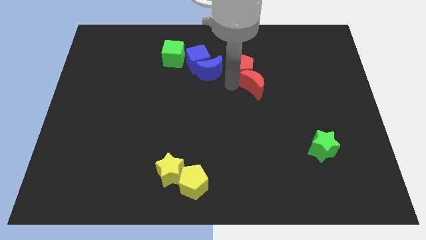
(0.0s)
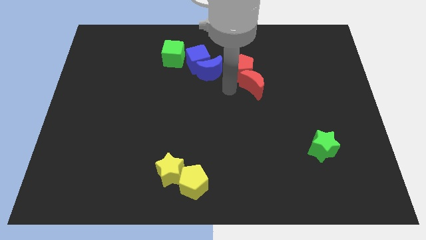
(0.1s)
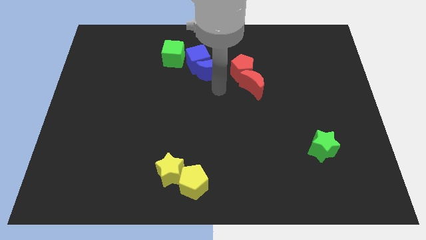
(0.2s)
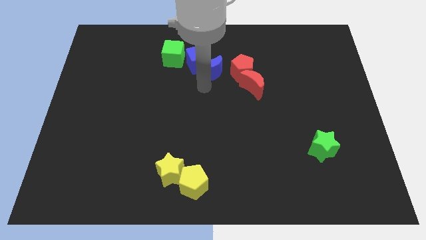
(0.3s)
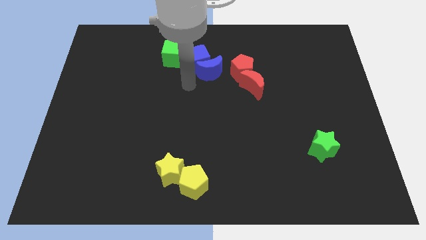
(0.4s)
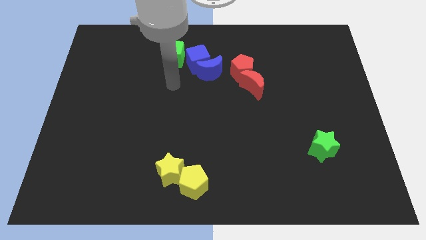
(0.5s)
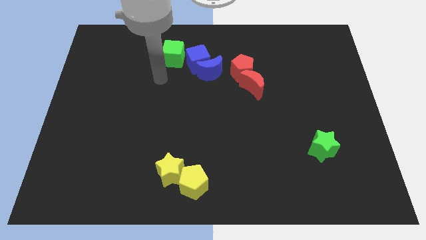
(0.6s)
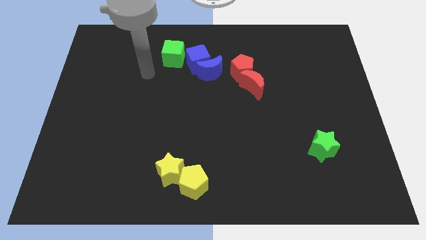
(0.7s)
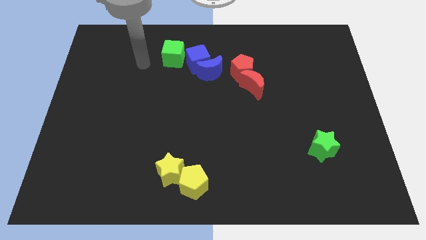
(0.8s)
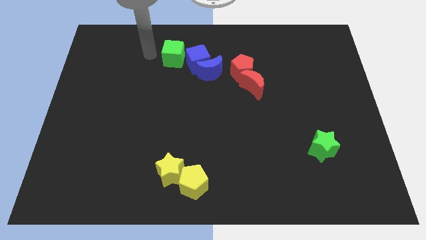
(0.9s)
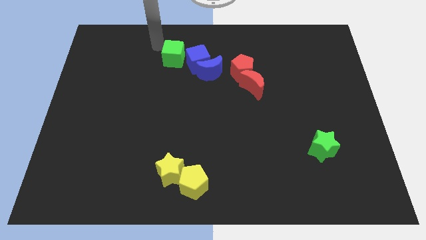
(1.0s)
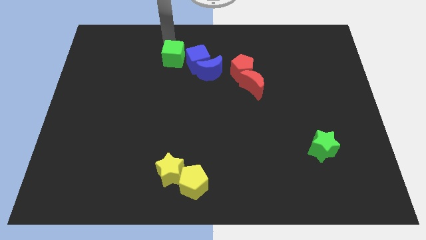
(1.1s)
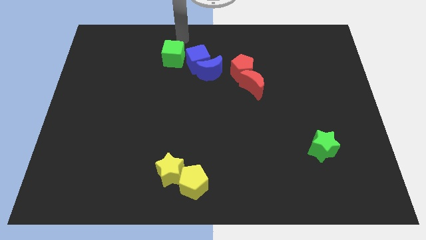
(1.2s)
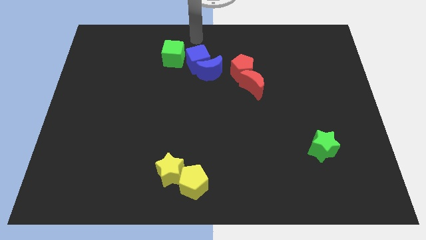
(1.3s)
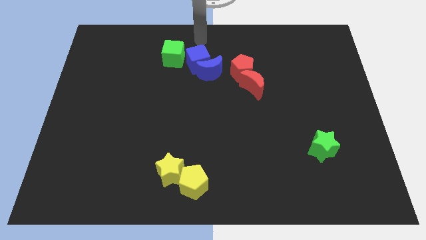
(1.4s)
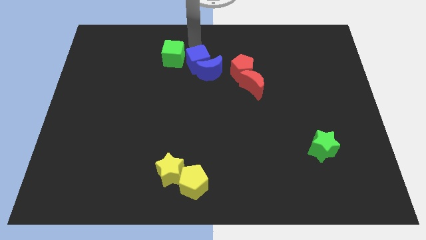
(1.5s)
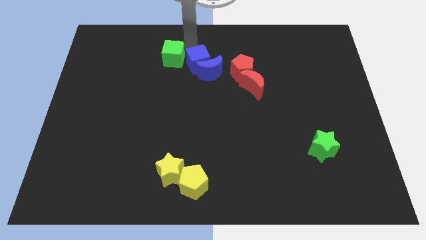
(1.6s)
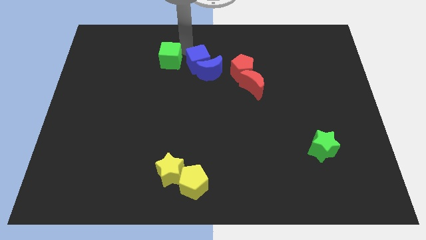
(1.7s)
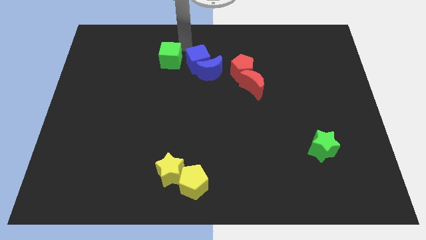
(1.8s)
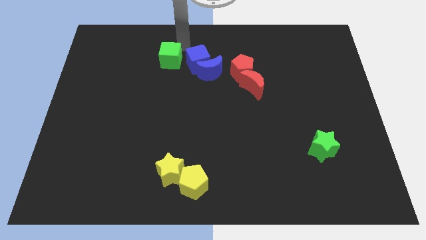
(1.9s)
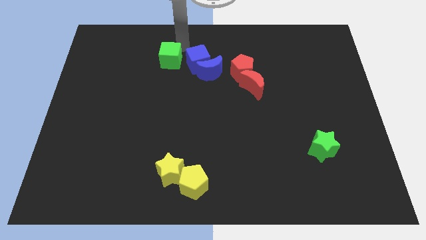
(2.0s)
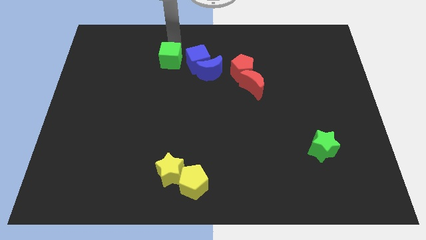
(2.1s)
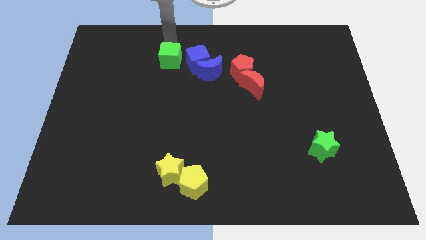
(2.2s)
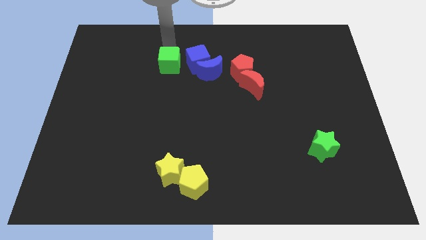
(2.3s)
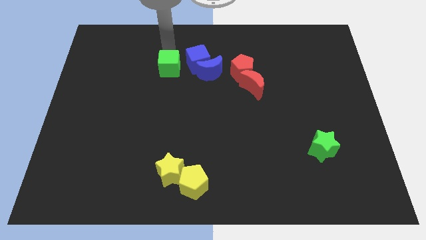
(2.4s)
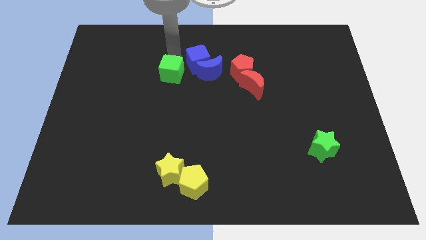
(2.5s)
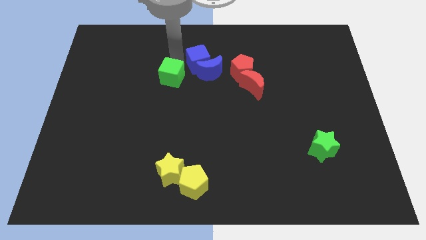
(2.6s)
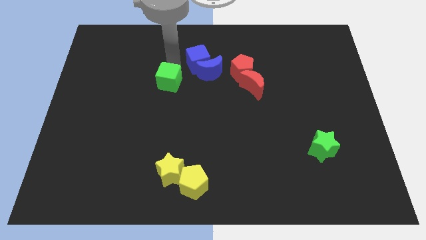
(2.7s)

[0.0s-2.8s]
move the green cube to the left of the blue crescent

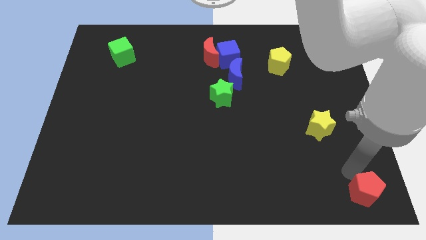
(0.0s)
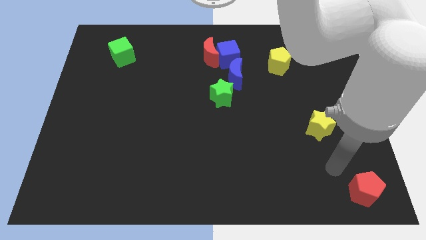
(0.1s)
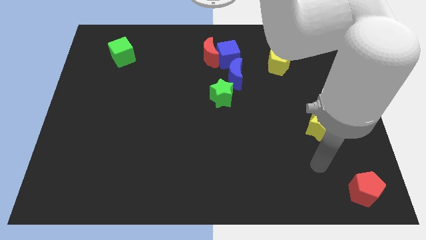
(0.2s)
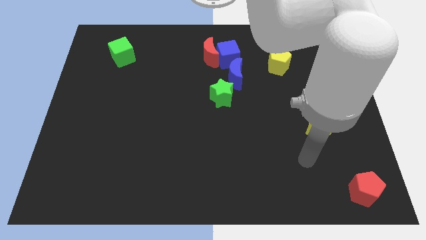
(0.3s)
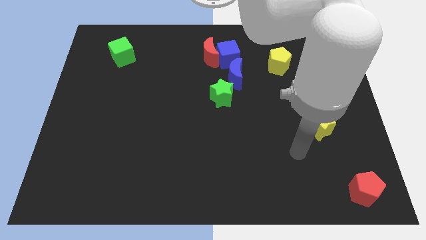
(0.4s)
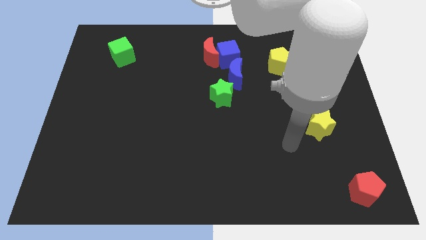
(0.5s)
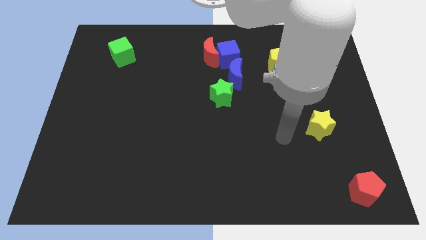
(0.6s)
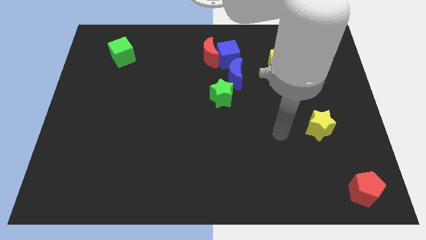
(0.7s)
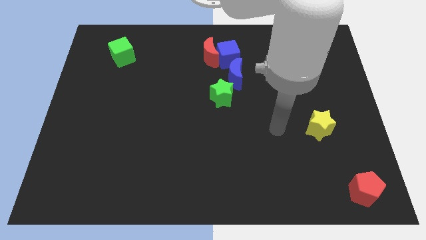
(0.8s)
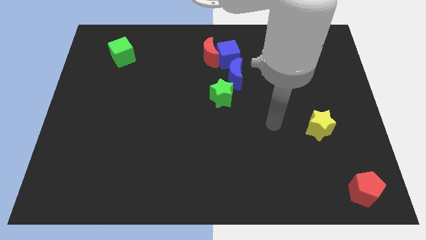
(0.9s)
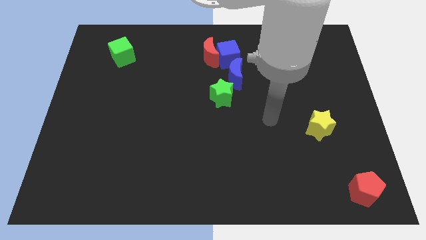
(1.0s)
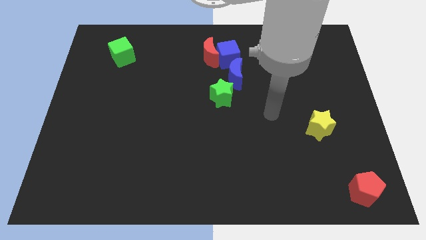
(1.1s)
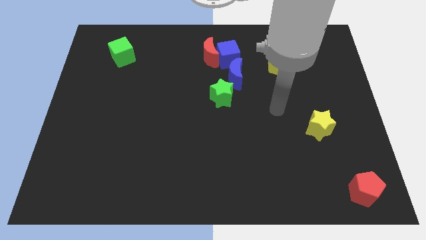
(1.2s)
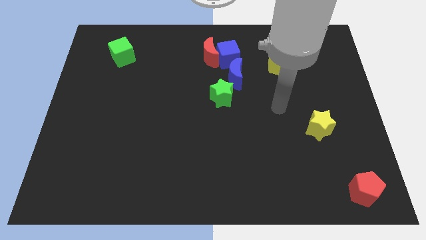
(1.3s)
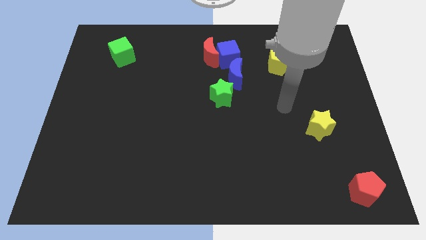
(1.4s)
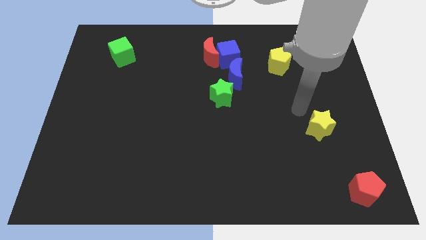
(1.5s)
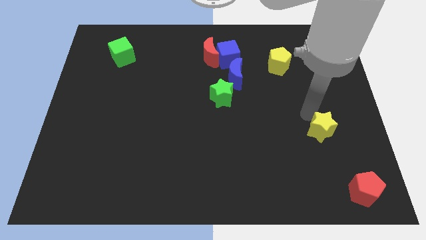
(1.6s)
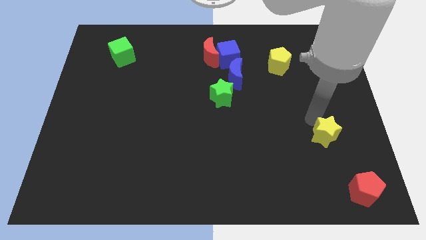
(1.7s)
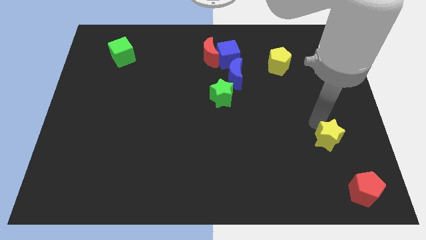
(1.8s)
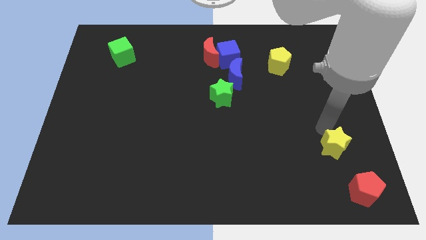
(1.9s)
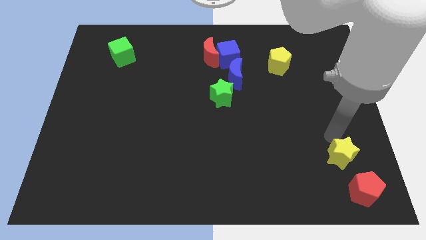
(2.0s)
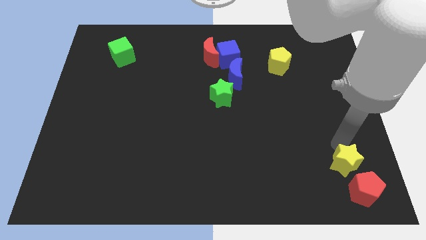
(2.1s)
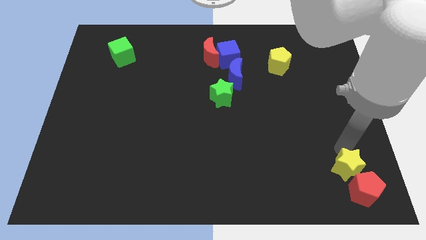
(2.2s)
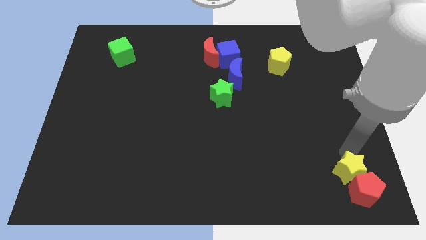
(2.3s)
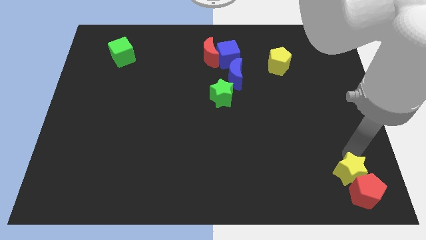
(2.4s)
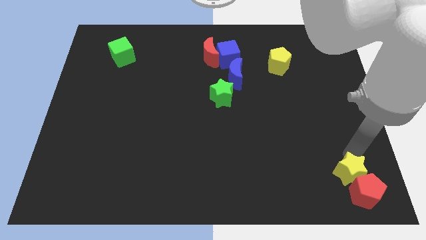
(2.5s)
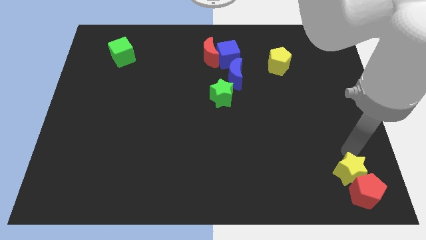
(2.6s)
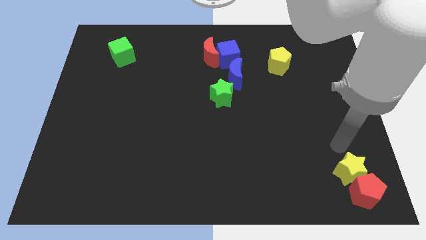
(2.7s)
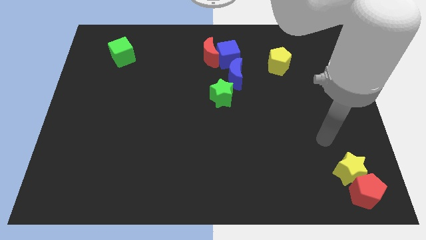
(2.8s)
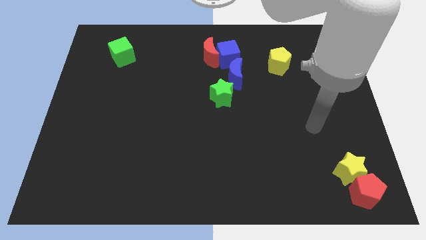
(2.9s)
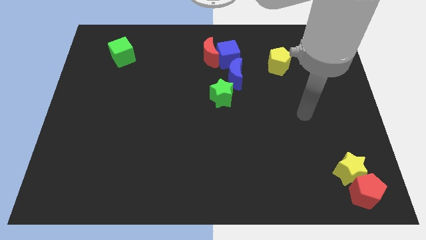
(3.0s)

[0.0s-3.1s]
move the yellow star into the red pentagon

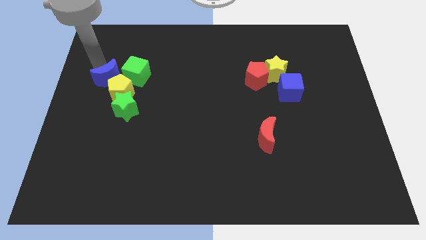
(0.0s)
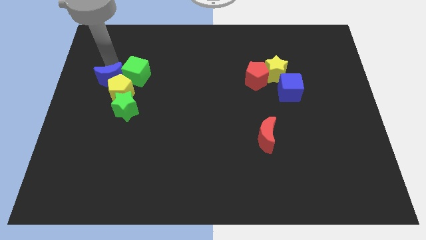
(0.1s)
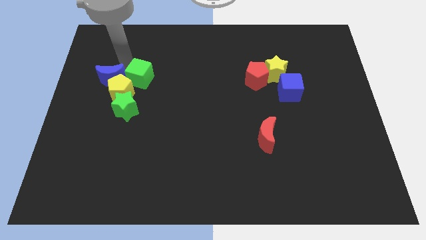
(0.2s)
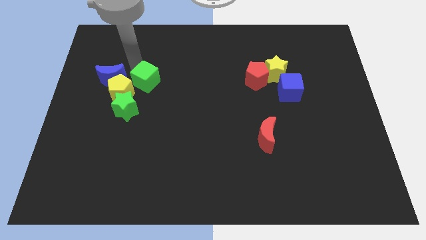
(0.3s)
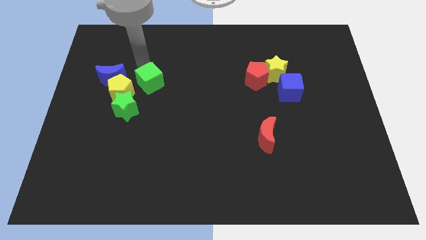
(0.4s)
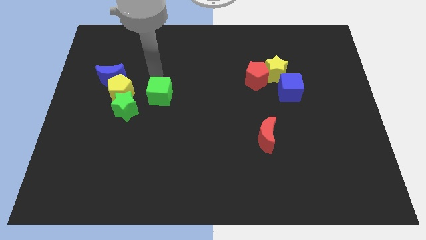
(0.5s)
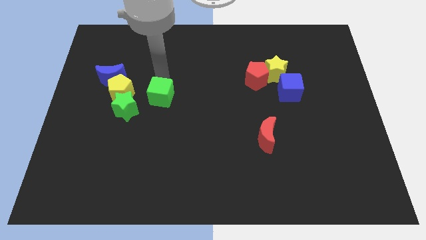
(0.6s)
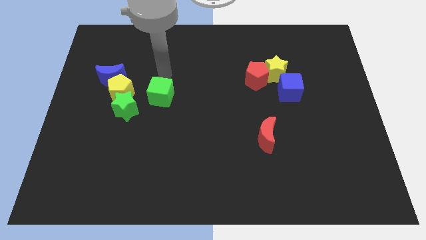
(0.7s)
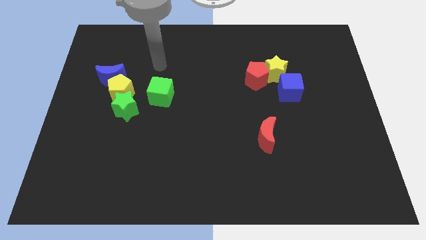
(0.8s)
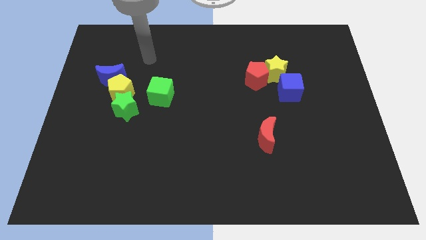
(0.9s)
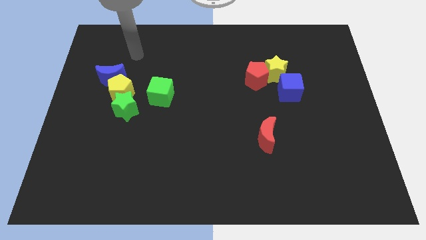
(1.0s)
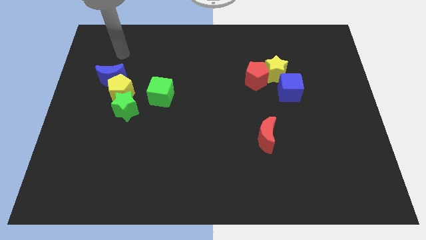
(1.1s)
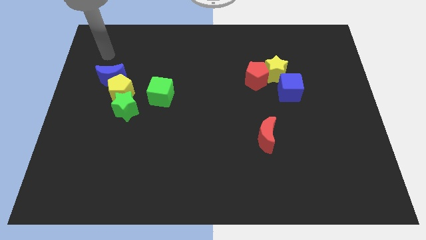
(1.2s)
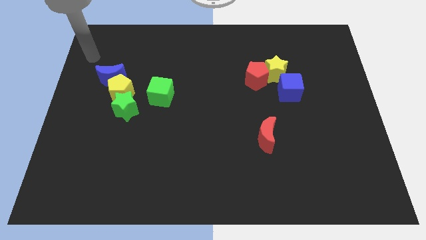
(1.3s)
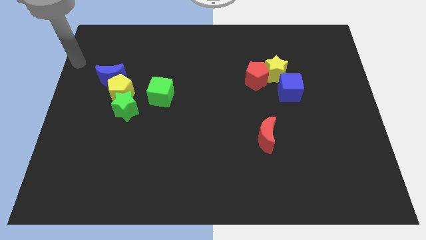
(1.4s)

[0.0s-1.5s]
move the green cube towards down

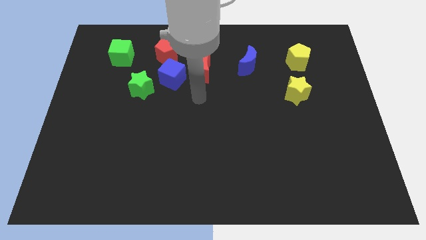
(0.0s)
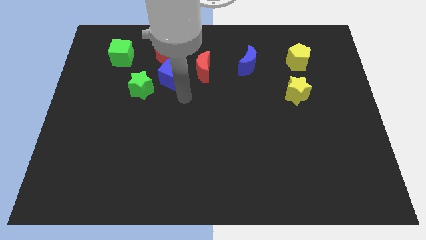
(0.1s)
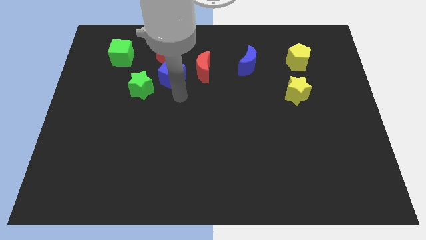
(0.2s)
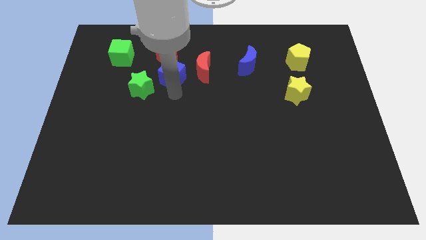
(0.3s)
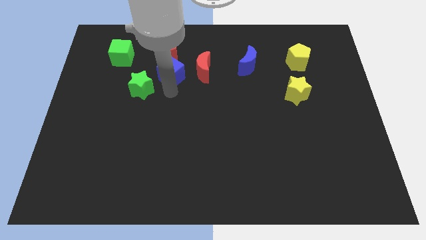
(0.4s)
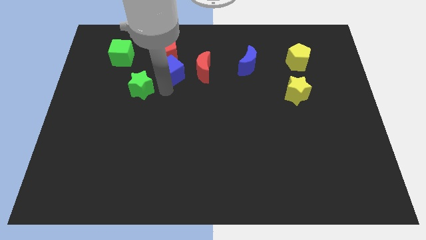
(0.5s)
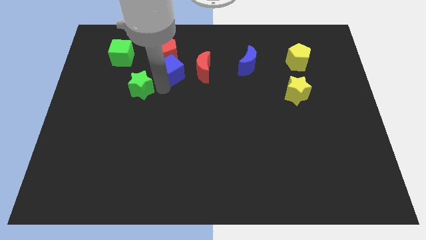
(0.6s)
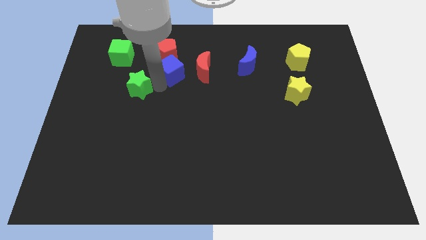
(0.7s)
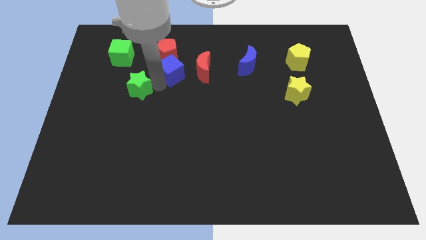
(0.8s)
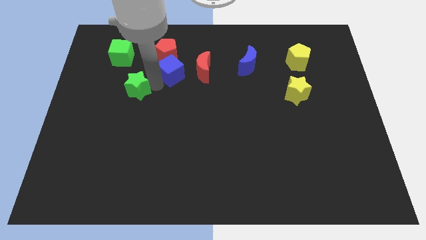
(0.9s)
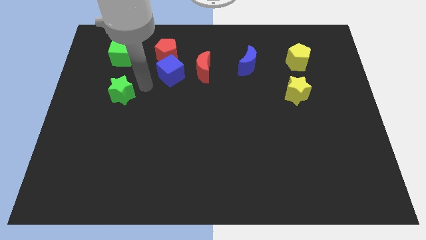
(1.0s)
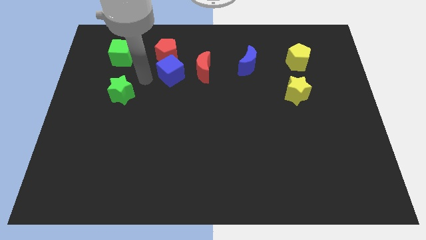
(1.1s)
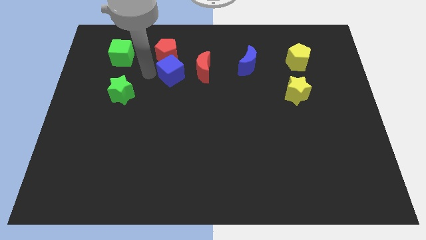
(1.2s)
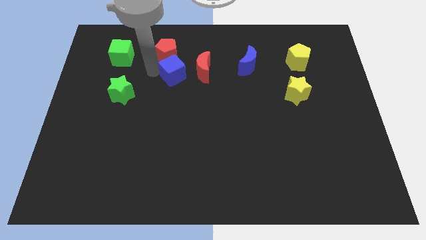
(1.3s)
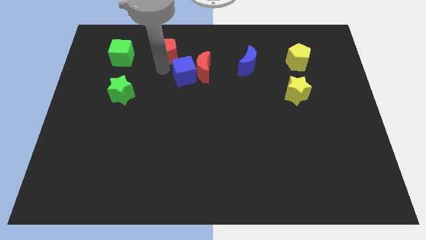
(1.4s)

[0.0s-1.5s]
move the blue cube to the left of red crescent

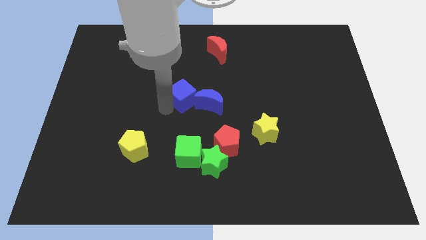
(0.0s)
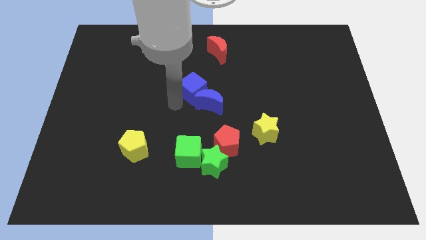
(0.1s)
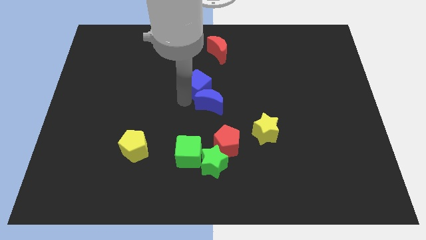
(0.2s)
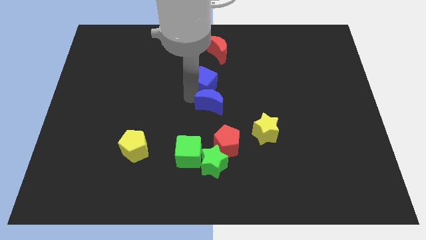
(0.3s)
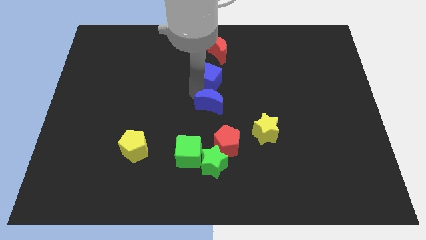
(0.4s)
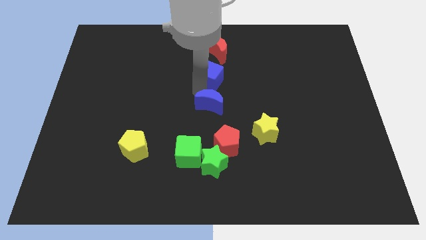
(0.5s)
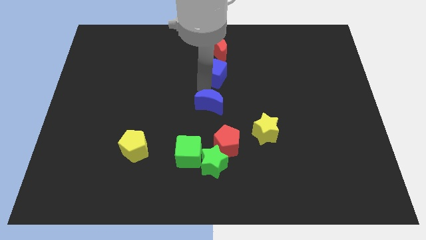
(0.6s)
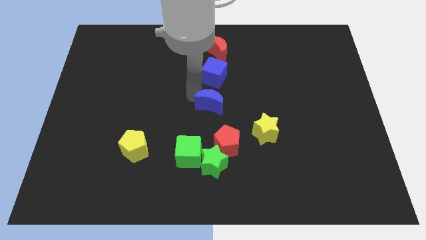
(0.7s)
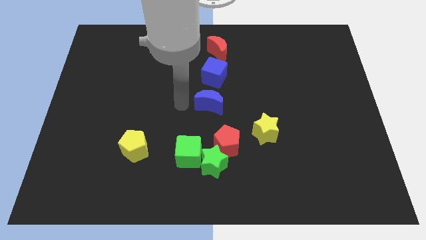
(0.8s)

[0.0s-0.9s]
separate the blue blocks
